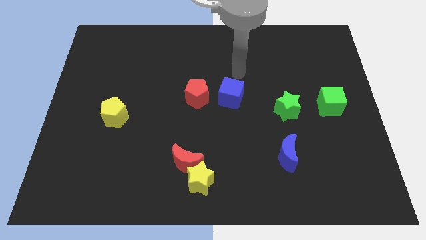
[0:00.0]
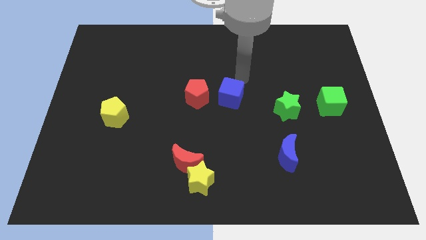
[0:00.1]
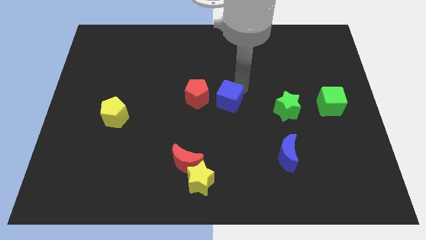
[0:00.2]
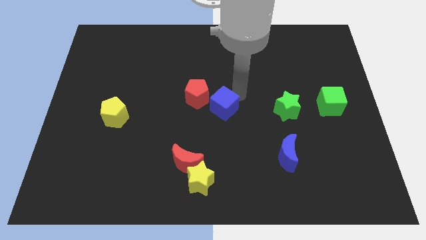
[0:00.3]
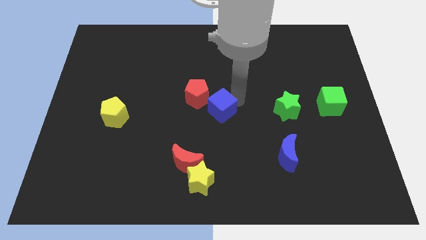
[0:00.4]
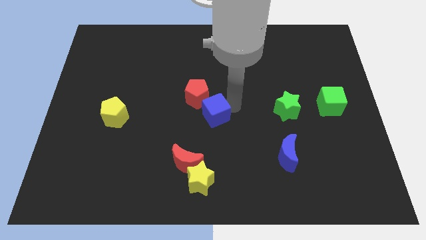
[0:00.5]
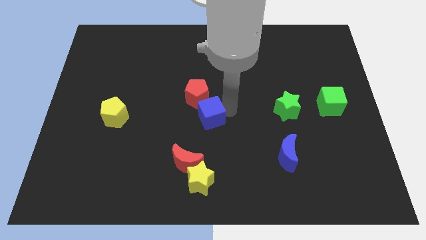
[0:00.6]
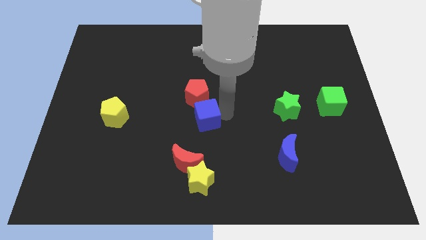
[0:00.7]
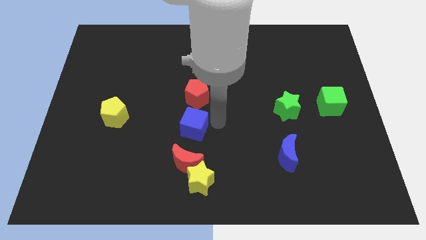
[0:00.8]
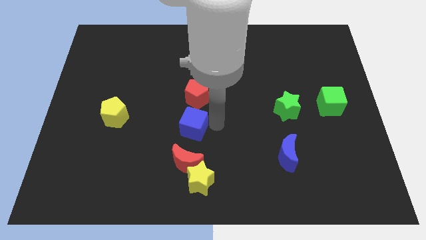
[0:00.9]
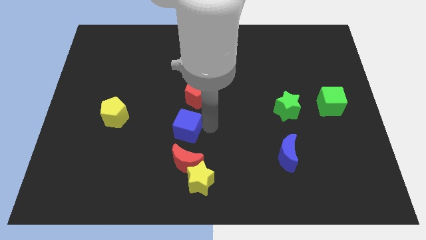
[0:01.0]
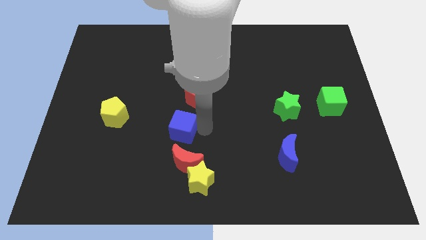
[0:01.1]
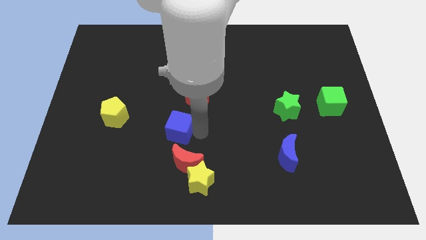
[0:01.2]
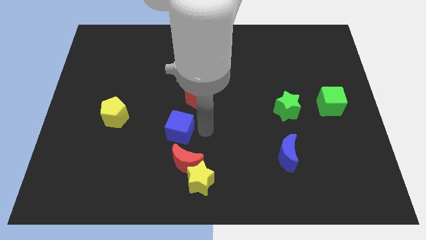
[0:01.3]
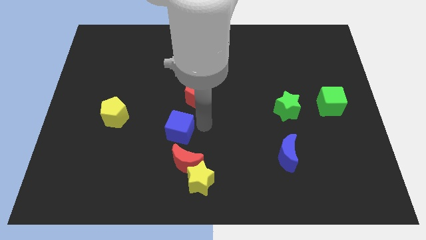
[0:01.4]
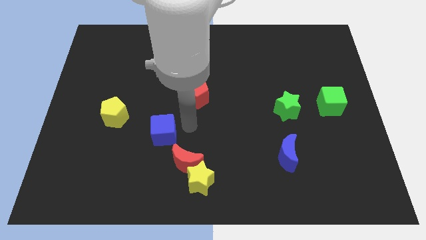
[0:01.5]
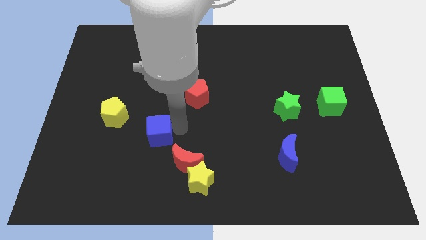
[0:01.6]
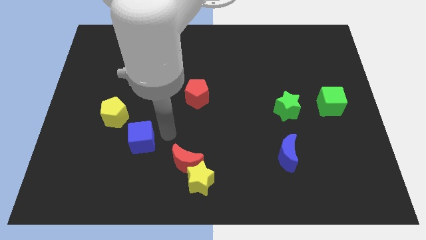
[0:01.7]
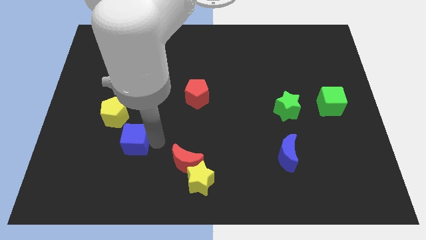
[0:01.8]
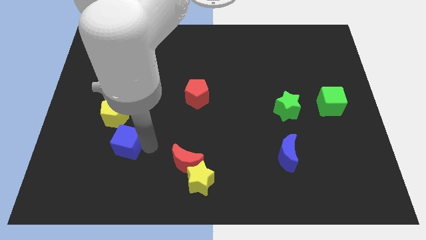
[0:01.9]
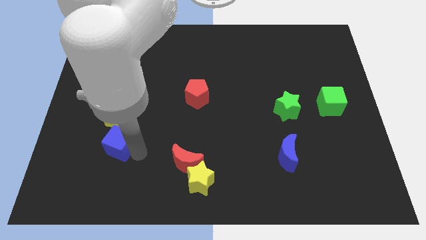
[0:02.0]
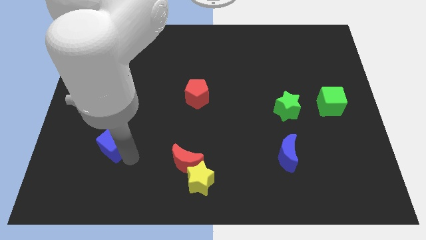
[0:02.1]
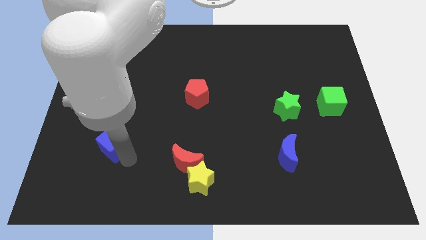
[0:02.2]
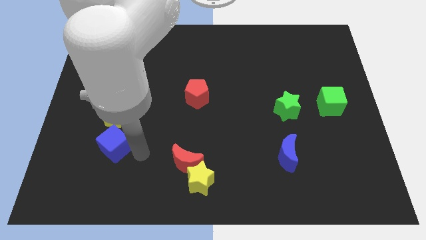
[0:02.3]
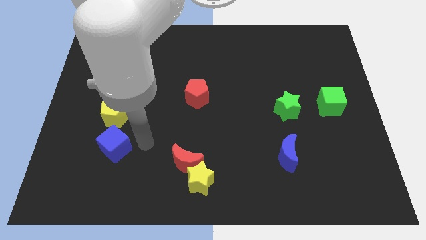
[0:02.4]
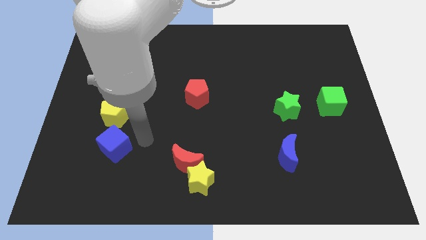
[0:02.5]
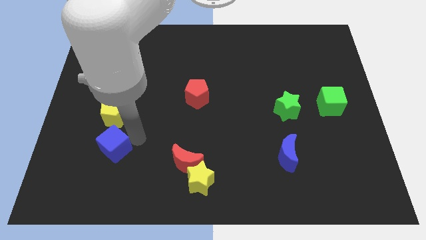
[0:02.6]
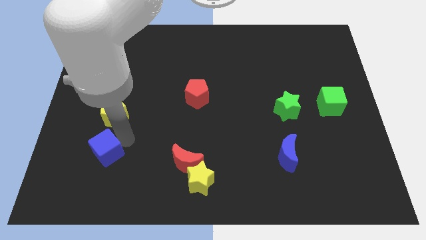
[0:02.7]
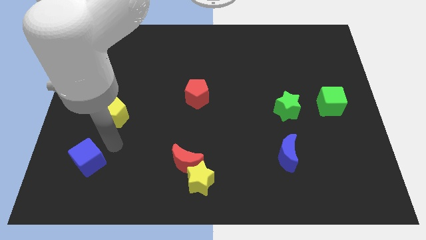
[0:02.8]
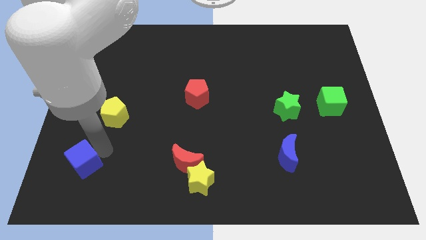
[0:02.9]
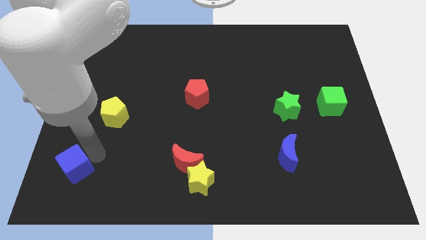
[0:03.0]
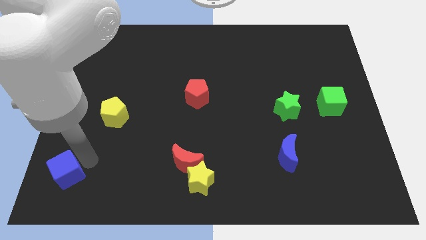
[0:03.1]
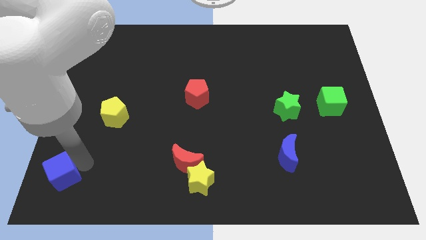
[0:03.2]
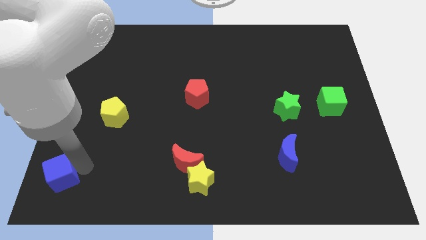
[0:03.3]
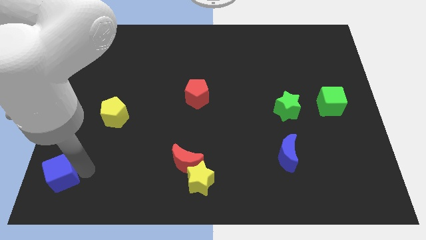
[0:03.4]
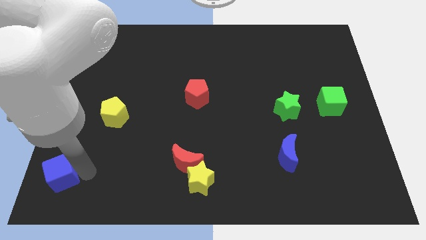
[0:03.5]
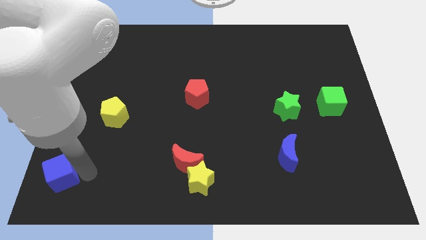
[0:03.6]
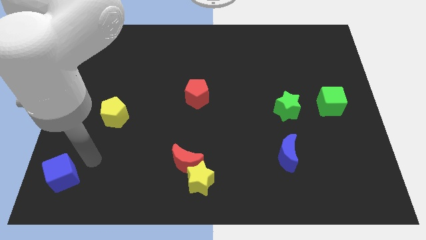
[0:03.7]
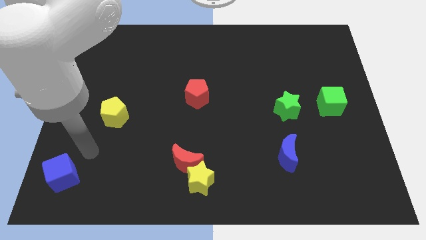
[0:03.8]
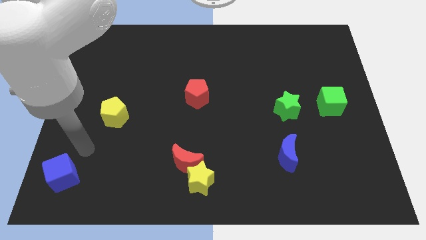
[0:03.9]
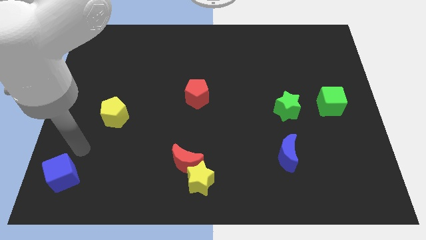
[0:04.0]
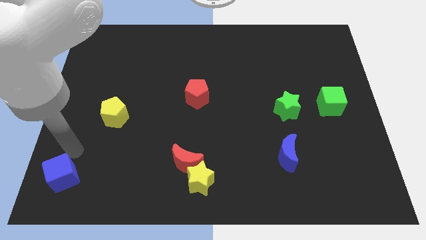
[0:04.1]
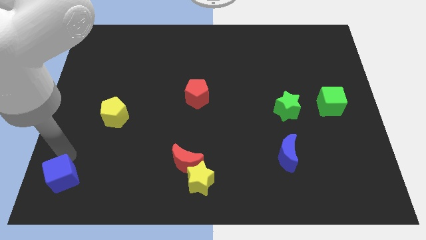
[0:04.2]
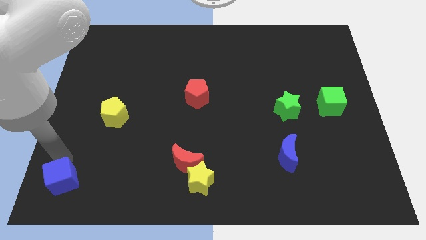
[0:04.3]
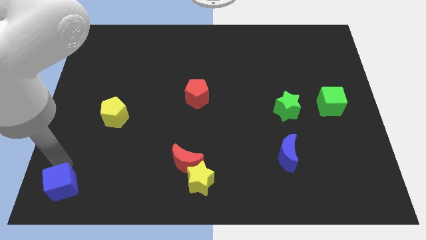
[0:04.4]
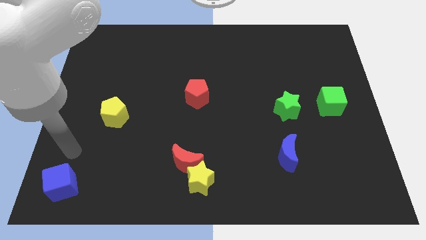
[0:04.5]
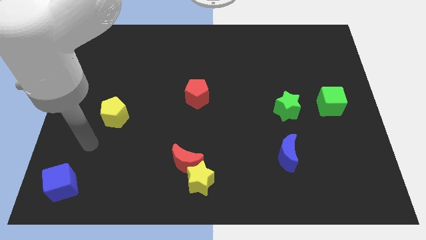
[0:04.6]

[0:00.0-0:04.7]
move the blue cube towards the bottom left side of the board

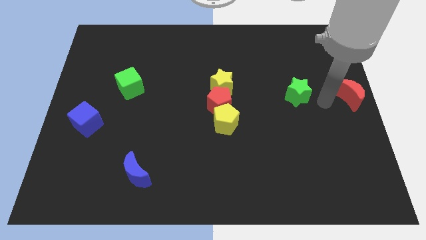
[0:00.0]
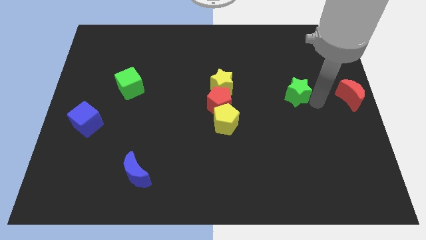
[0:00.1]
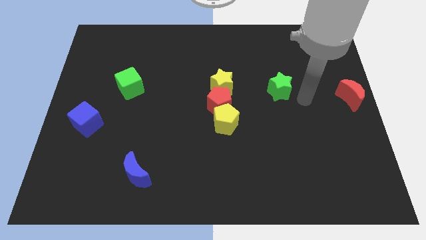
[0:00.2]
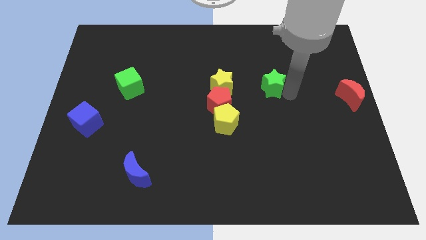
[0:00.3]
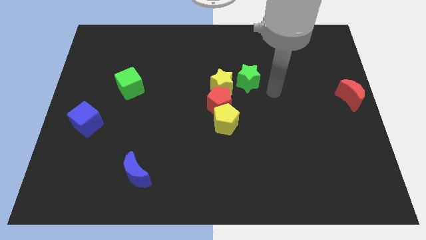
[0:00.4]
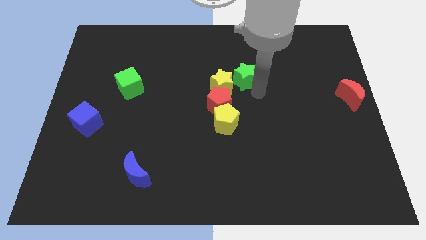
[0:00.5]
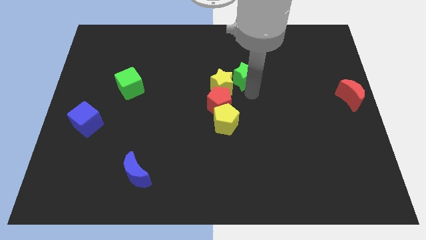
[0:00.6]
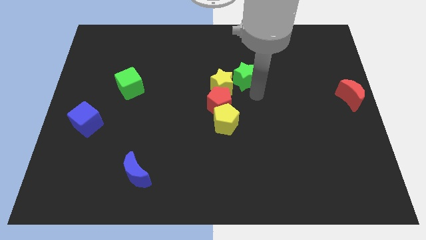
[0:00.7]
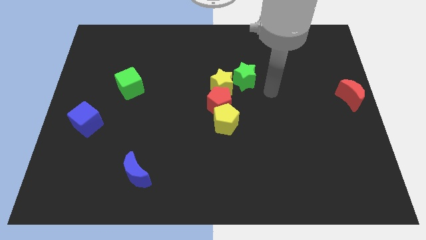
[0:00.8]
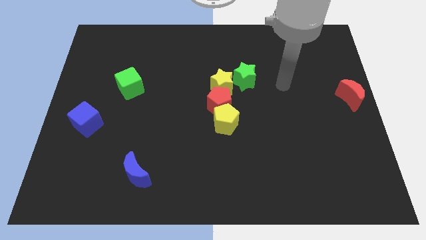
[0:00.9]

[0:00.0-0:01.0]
place green star to the top right of yellow star

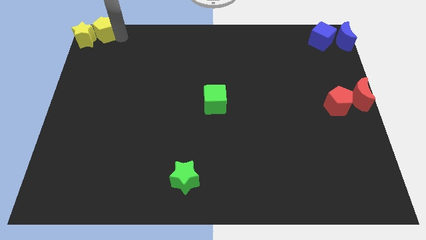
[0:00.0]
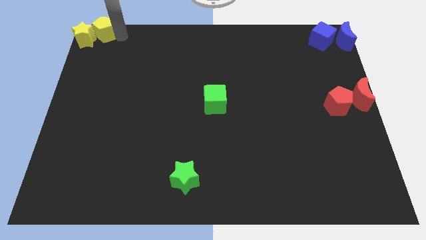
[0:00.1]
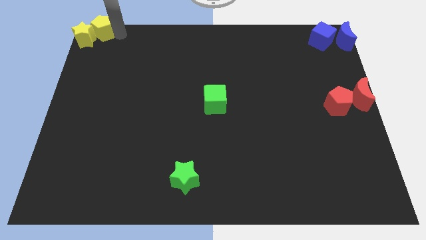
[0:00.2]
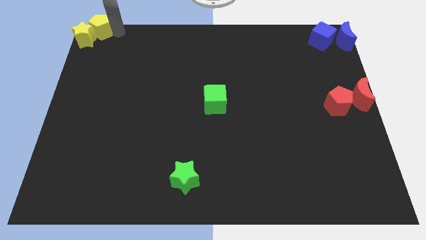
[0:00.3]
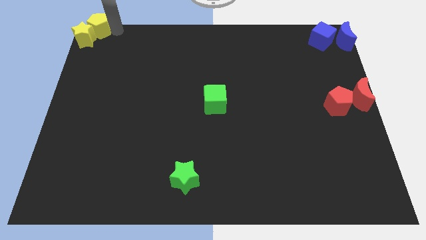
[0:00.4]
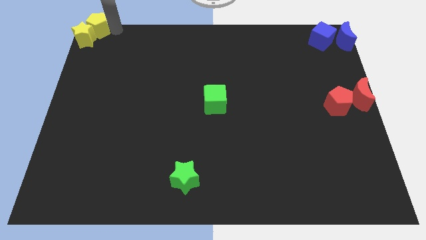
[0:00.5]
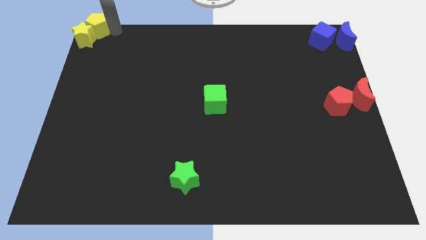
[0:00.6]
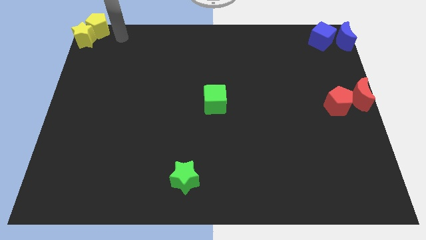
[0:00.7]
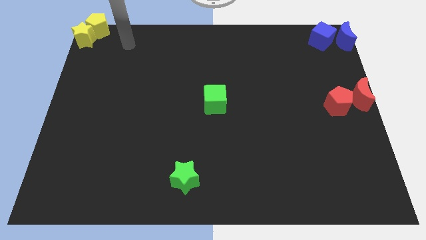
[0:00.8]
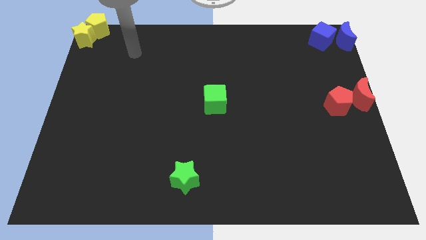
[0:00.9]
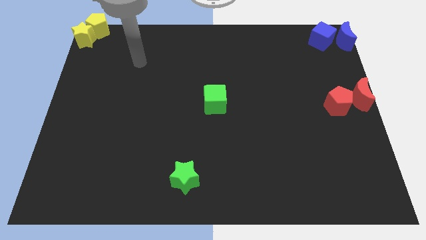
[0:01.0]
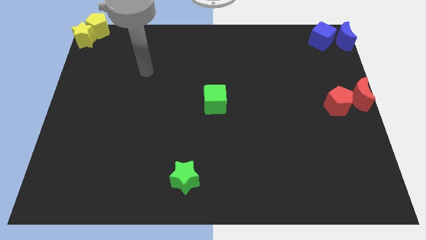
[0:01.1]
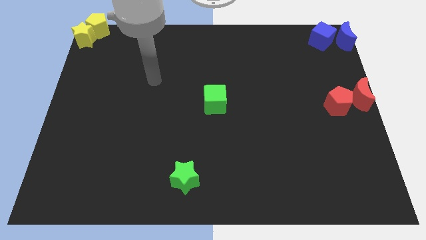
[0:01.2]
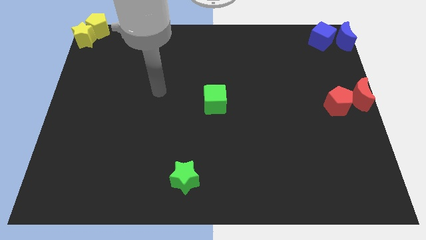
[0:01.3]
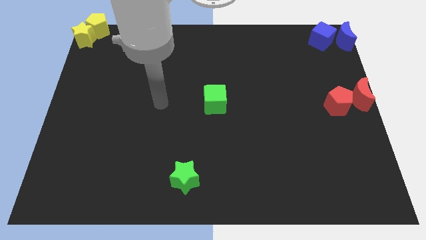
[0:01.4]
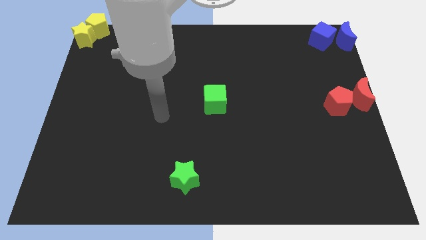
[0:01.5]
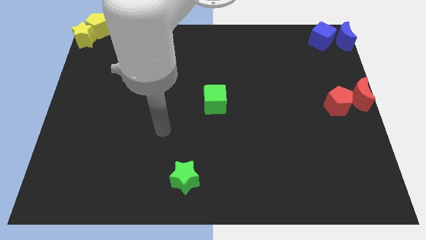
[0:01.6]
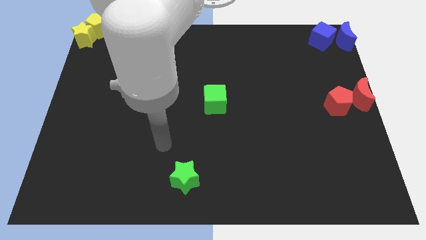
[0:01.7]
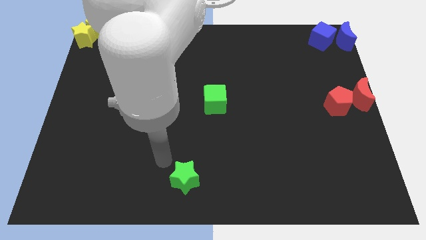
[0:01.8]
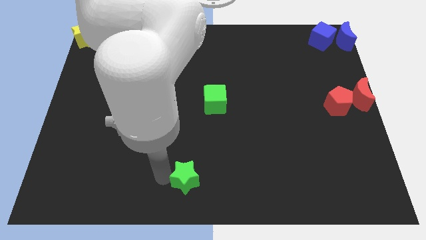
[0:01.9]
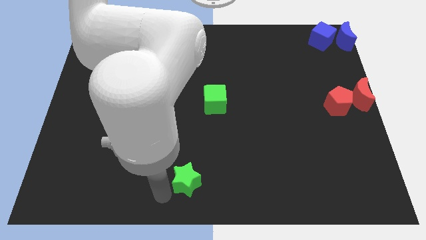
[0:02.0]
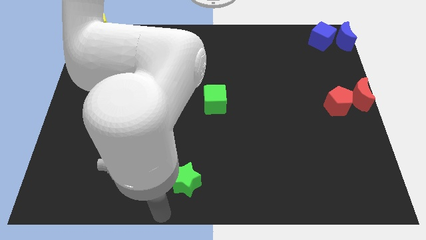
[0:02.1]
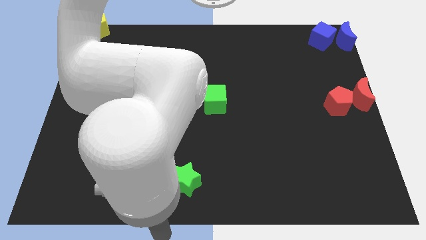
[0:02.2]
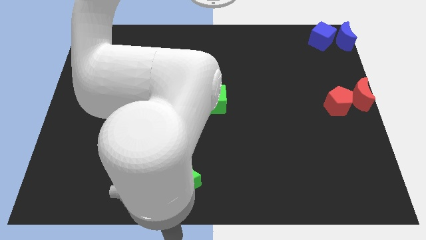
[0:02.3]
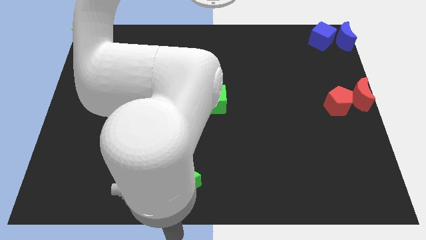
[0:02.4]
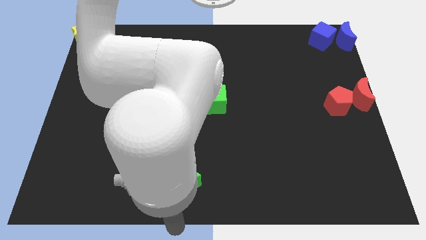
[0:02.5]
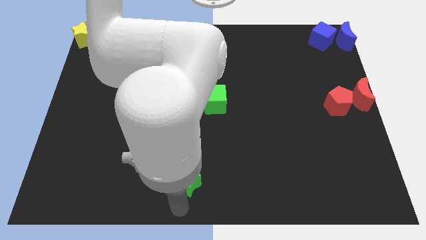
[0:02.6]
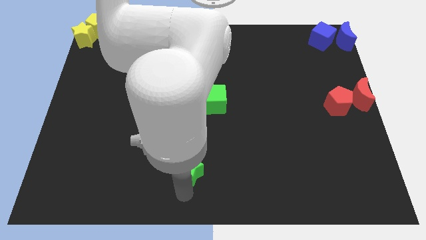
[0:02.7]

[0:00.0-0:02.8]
move your hand away from the yellow pentagon

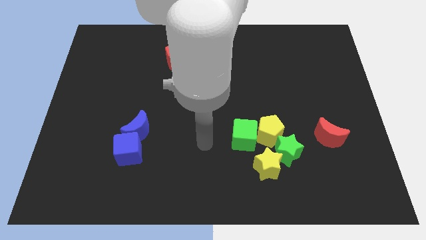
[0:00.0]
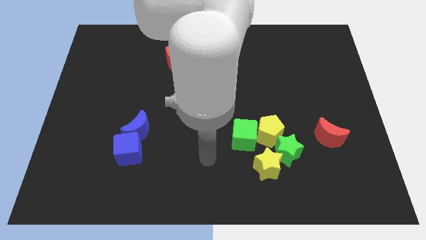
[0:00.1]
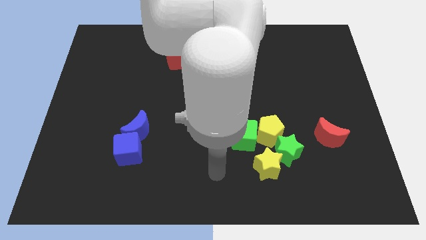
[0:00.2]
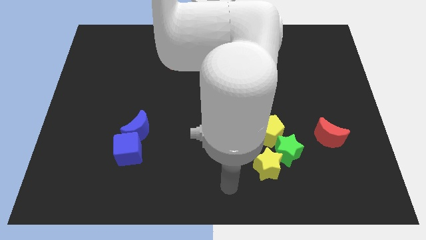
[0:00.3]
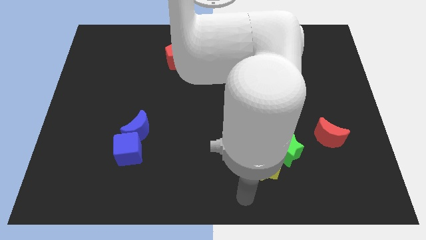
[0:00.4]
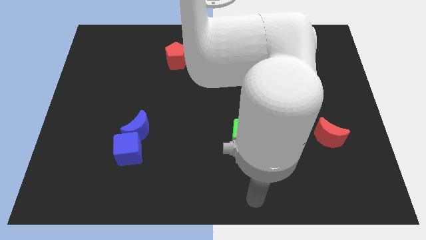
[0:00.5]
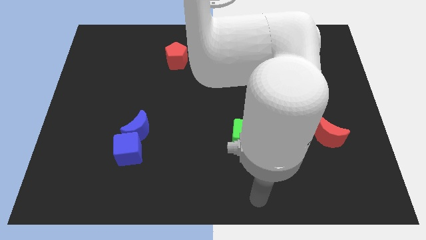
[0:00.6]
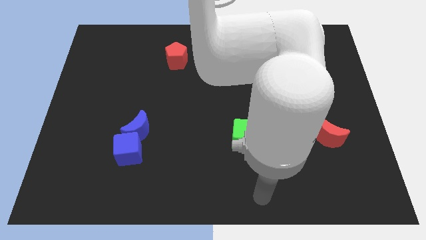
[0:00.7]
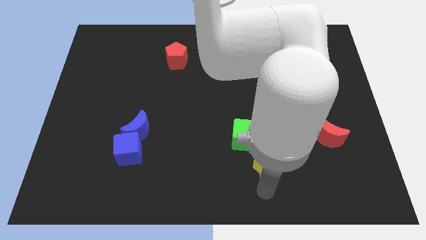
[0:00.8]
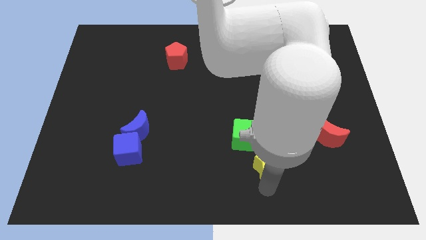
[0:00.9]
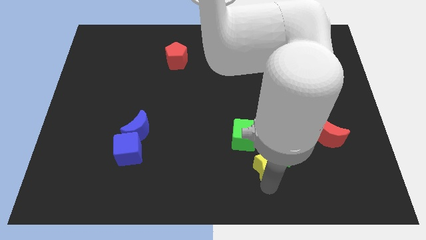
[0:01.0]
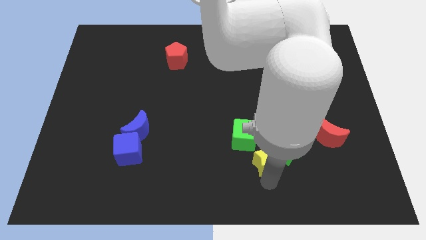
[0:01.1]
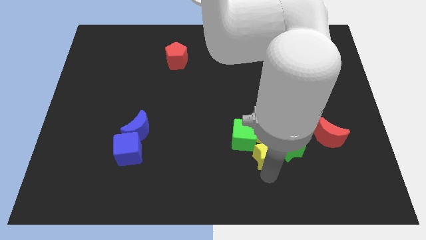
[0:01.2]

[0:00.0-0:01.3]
touch the bottom of the yellow star
